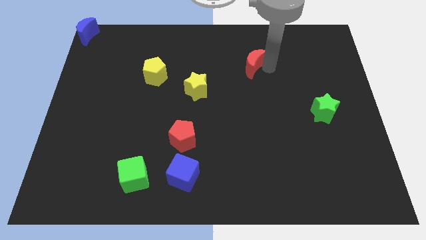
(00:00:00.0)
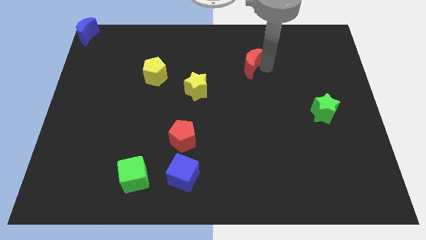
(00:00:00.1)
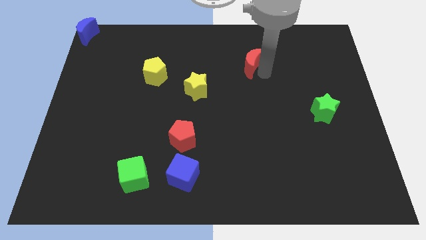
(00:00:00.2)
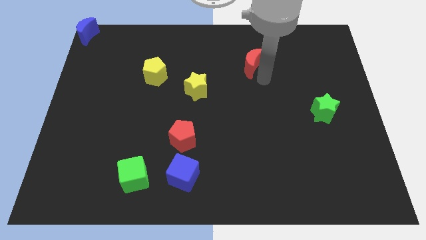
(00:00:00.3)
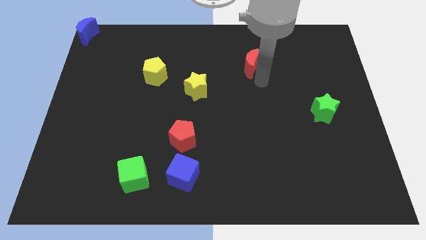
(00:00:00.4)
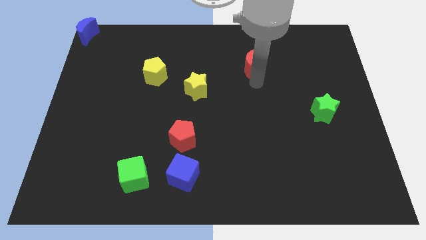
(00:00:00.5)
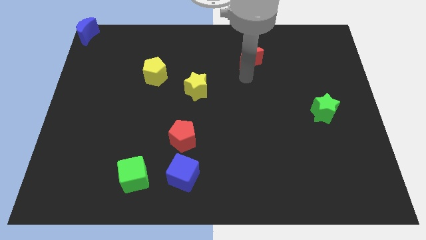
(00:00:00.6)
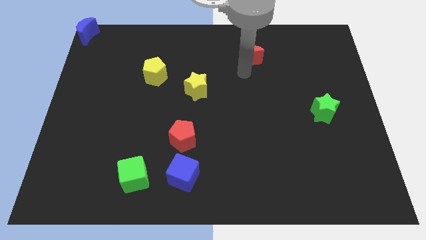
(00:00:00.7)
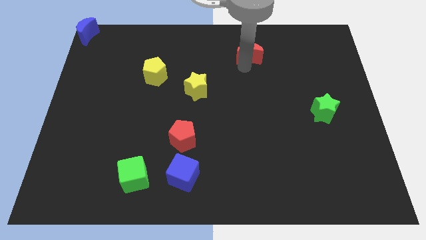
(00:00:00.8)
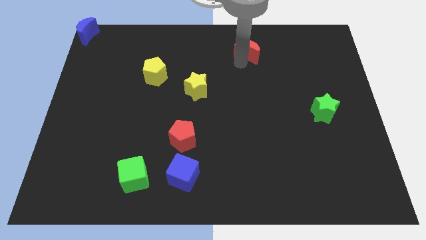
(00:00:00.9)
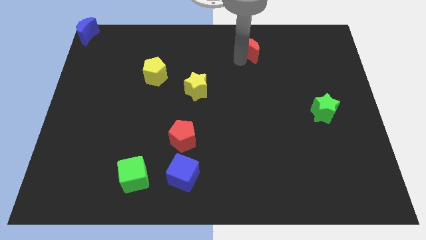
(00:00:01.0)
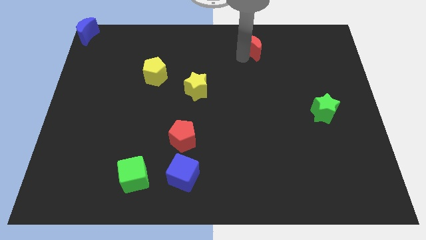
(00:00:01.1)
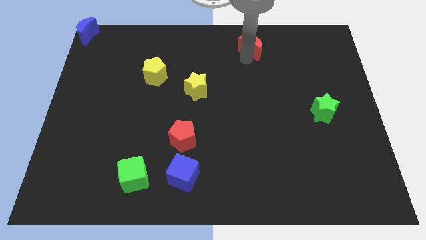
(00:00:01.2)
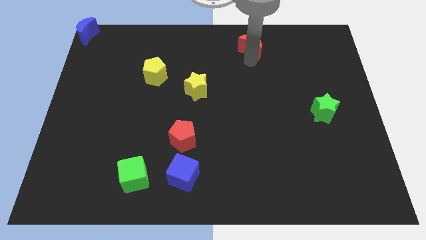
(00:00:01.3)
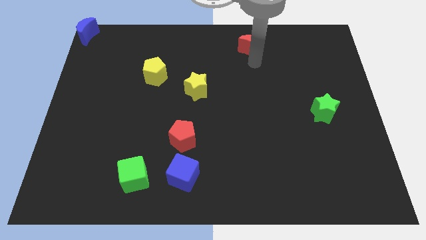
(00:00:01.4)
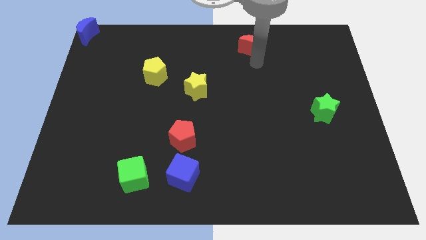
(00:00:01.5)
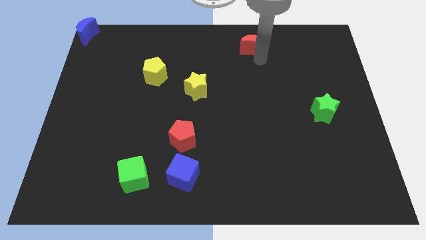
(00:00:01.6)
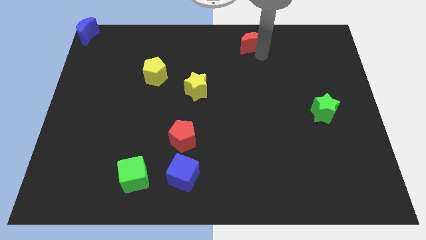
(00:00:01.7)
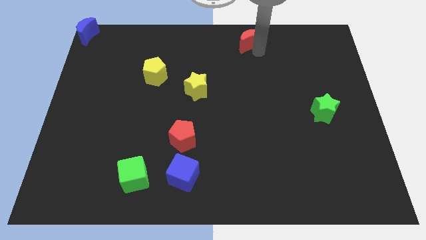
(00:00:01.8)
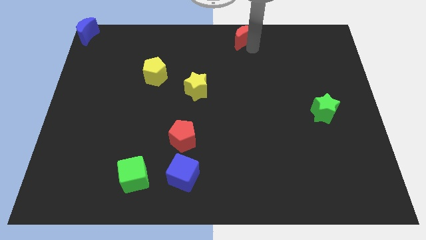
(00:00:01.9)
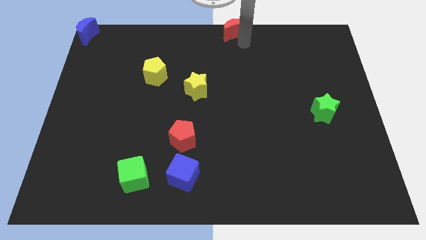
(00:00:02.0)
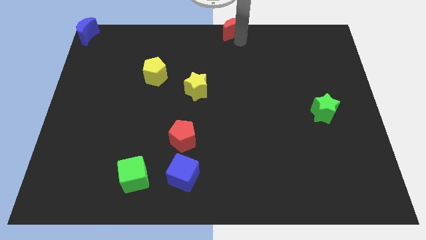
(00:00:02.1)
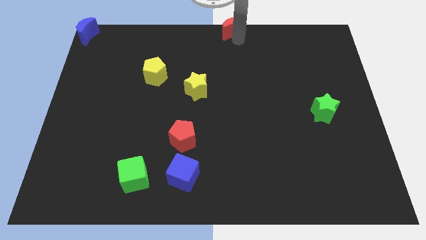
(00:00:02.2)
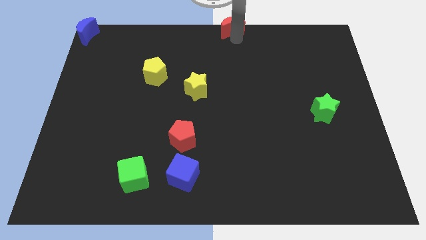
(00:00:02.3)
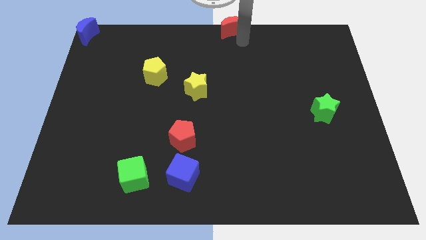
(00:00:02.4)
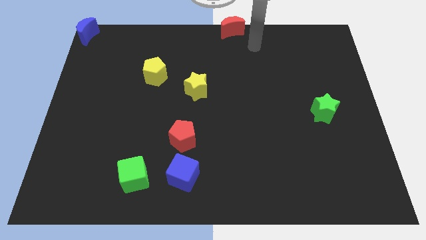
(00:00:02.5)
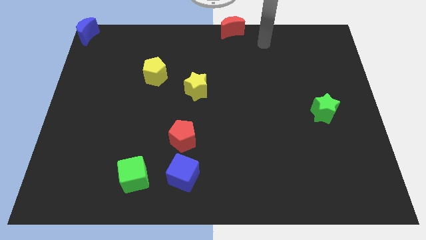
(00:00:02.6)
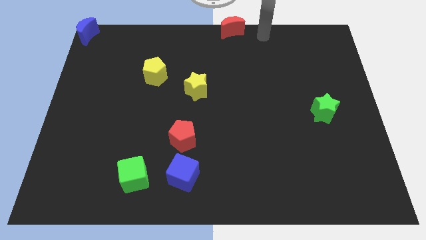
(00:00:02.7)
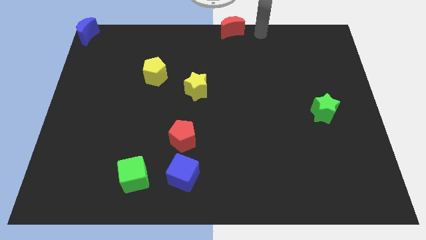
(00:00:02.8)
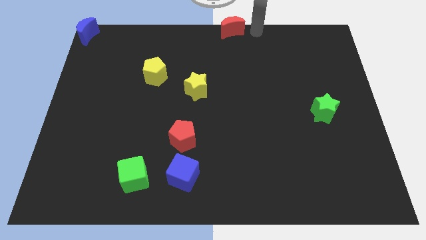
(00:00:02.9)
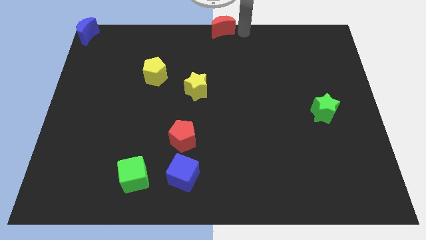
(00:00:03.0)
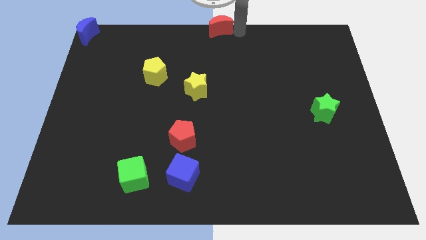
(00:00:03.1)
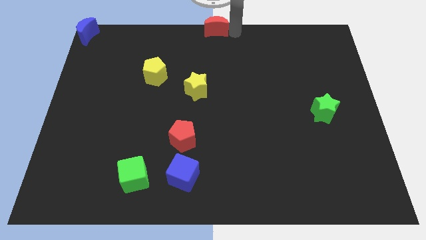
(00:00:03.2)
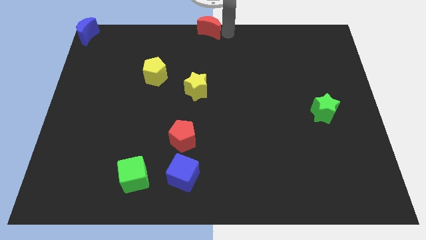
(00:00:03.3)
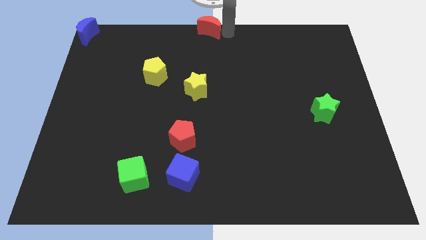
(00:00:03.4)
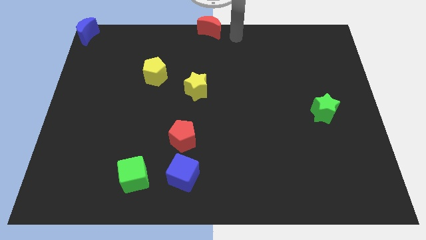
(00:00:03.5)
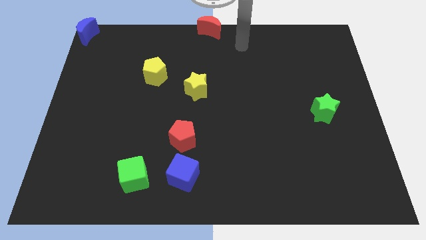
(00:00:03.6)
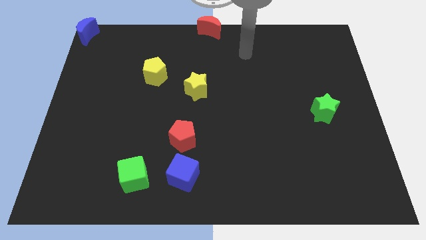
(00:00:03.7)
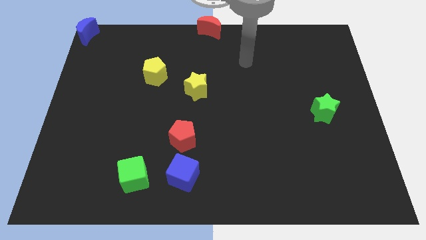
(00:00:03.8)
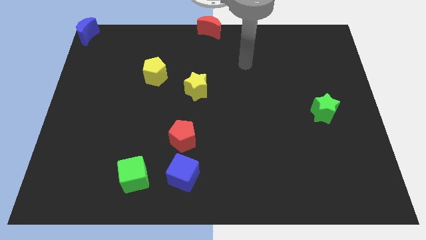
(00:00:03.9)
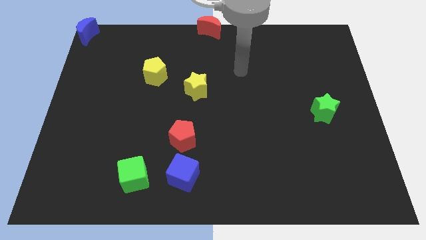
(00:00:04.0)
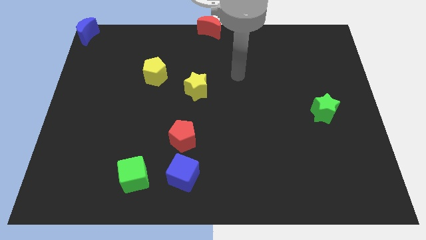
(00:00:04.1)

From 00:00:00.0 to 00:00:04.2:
slide the red moon at the top center

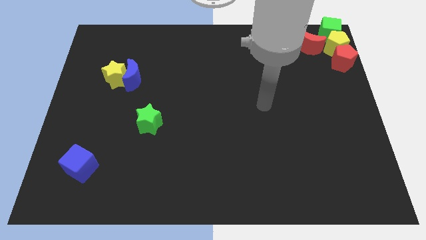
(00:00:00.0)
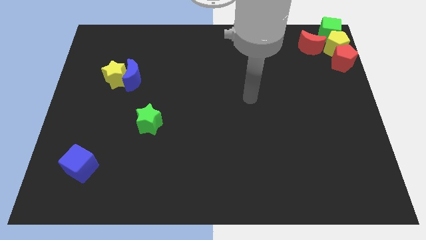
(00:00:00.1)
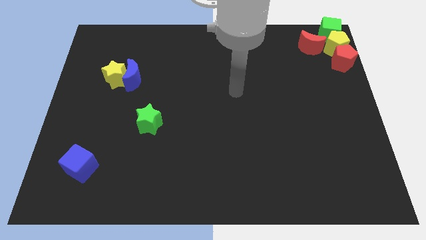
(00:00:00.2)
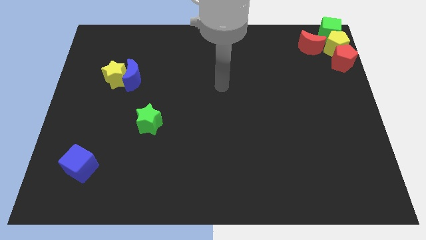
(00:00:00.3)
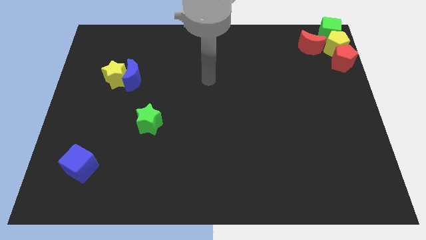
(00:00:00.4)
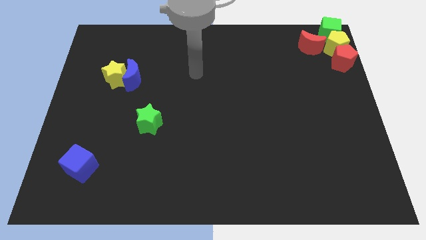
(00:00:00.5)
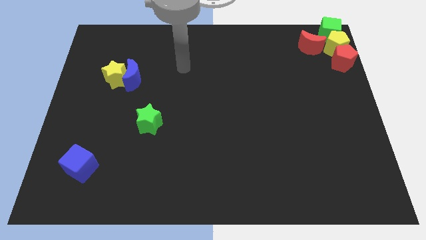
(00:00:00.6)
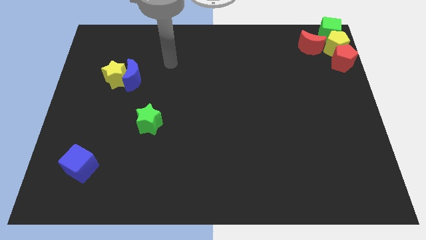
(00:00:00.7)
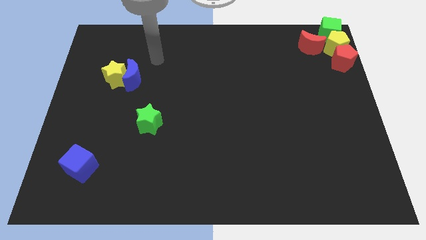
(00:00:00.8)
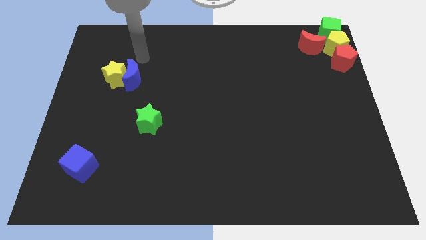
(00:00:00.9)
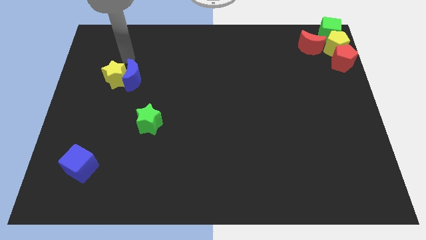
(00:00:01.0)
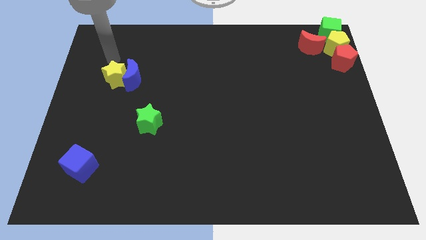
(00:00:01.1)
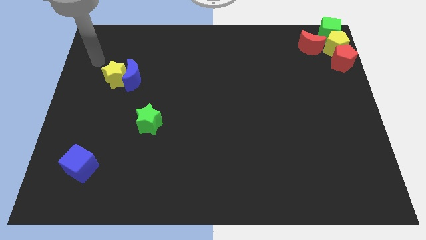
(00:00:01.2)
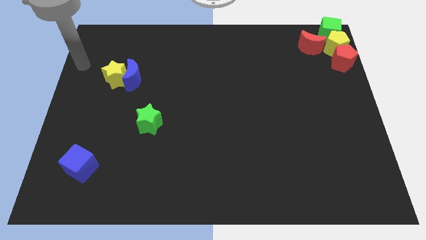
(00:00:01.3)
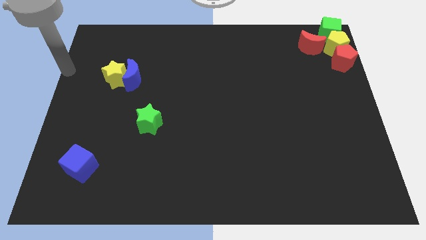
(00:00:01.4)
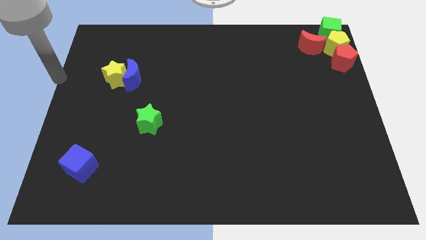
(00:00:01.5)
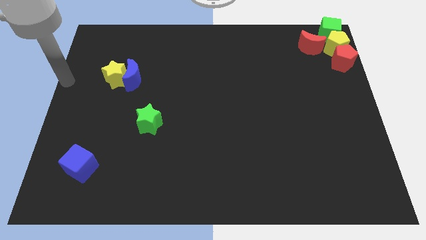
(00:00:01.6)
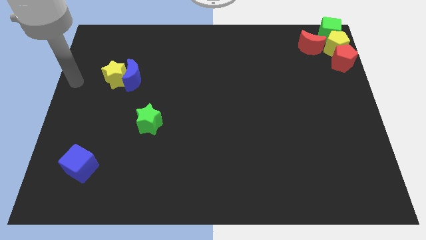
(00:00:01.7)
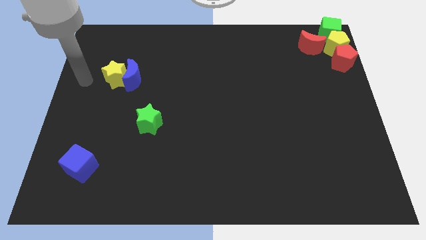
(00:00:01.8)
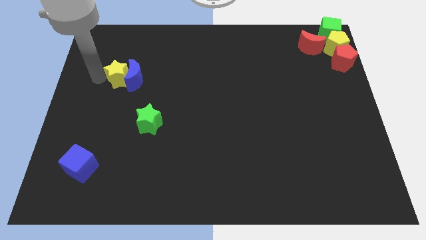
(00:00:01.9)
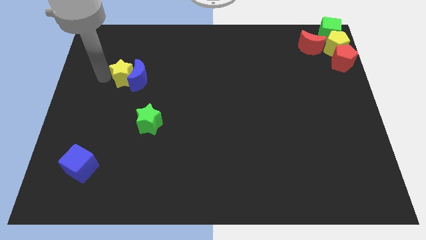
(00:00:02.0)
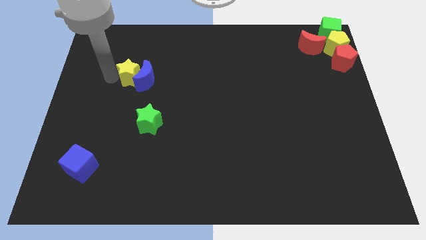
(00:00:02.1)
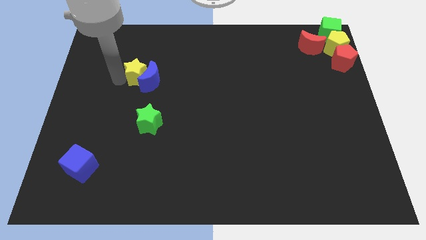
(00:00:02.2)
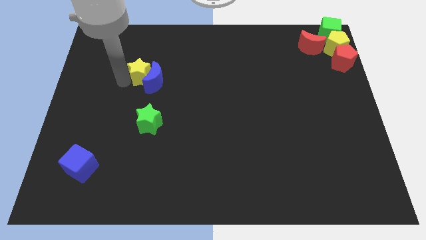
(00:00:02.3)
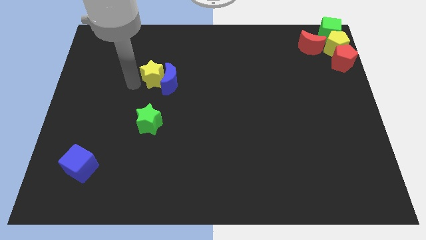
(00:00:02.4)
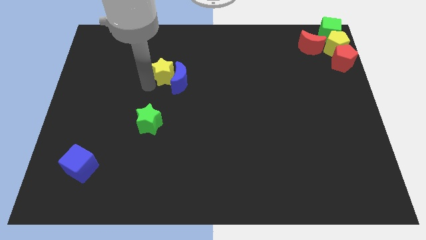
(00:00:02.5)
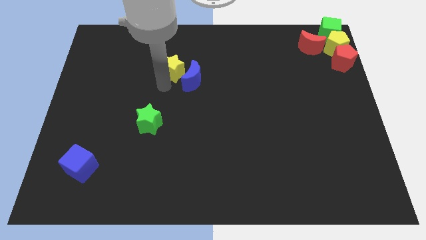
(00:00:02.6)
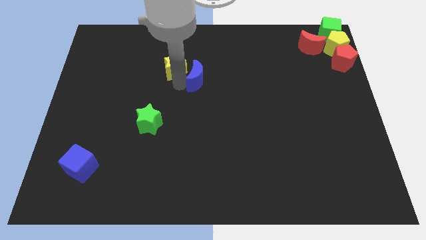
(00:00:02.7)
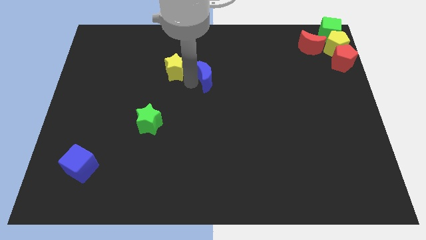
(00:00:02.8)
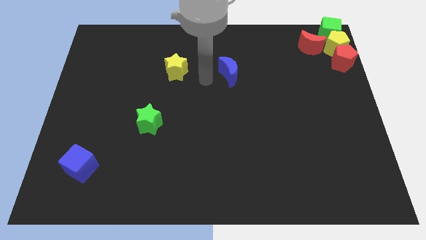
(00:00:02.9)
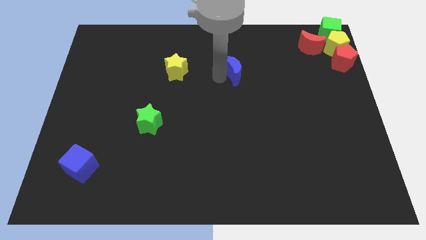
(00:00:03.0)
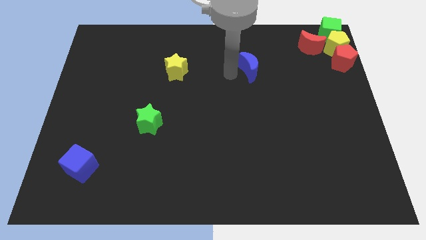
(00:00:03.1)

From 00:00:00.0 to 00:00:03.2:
separate the yellow star and the blue crescent

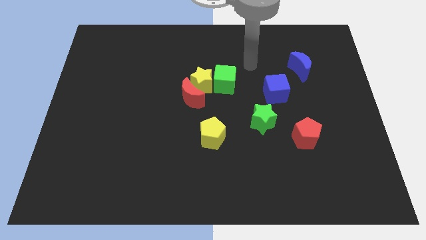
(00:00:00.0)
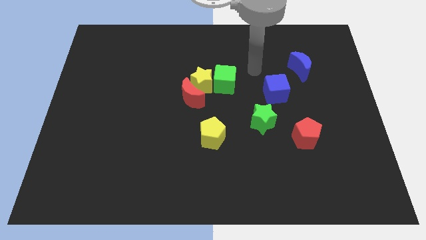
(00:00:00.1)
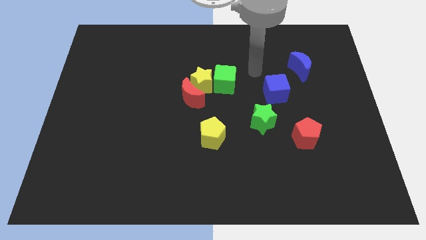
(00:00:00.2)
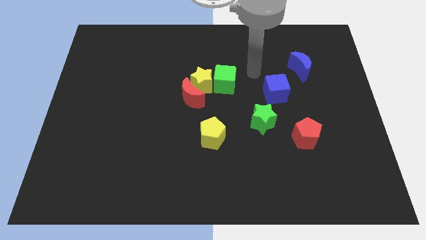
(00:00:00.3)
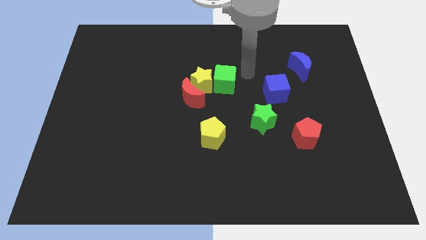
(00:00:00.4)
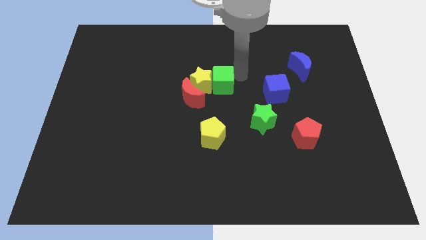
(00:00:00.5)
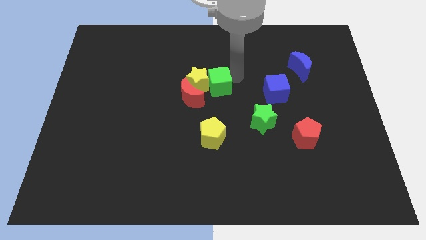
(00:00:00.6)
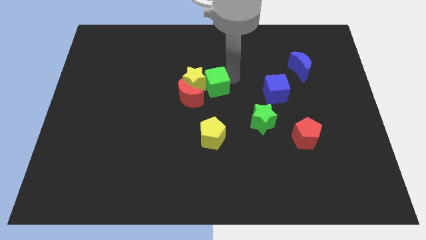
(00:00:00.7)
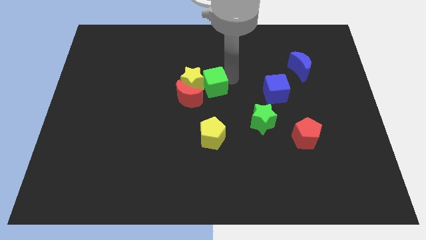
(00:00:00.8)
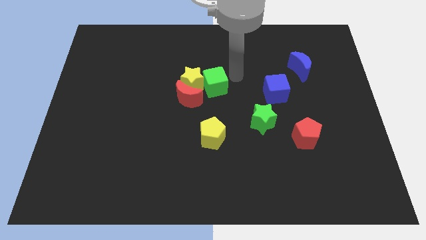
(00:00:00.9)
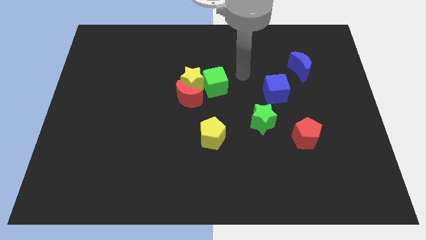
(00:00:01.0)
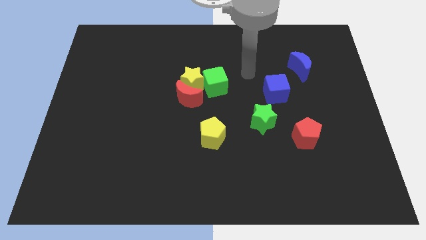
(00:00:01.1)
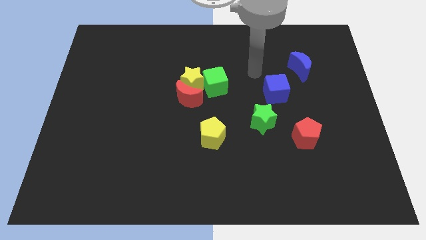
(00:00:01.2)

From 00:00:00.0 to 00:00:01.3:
push the green cube to the left side slightly
